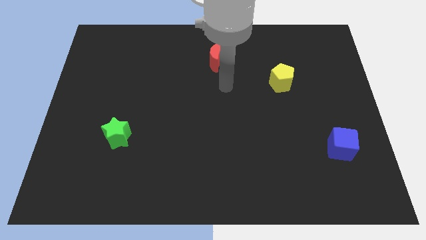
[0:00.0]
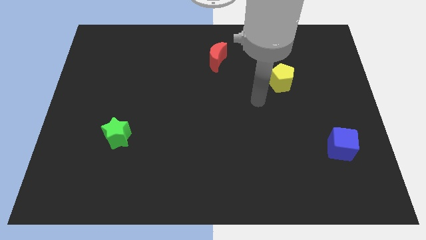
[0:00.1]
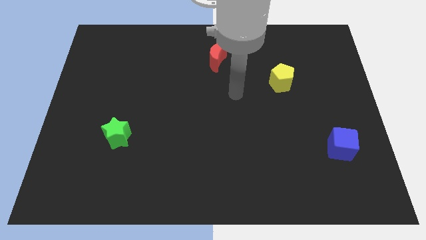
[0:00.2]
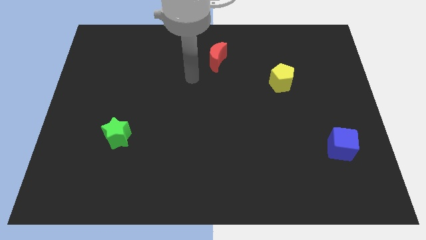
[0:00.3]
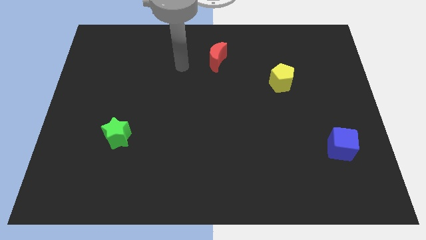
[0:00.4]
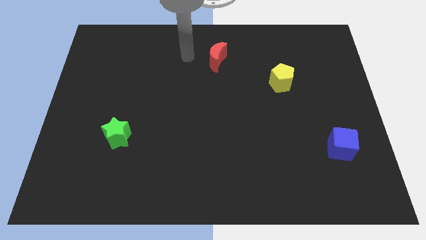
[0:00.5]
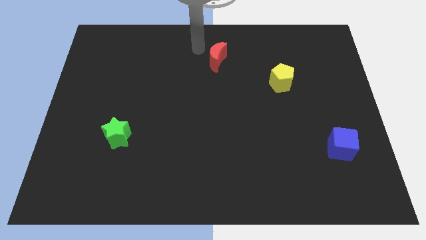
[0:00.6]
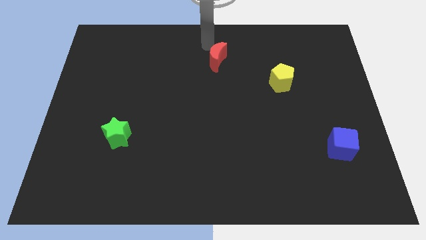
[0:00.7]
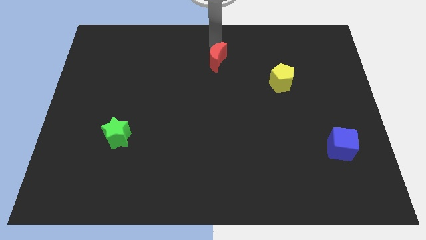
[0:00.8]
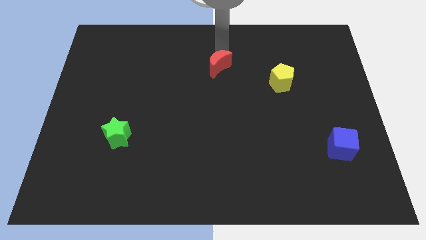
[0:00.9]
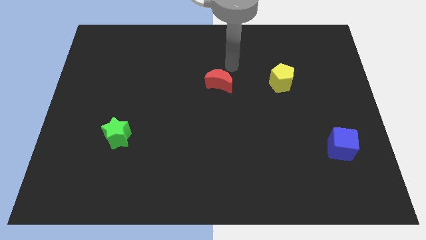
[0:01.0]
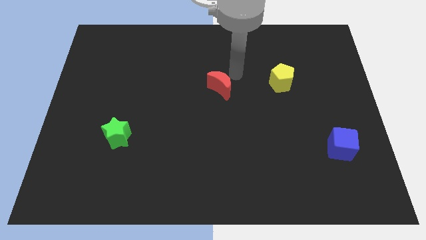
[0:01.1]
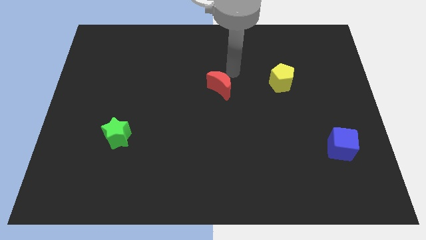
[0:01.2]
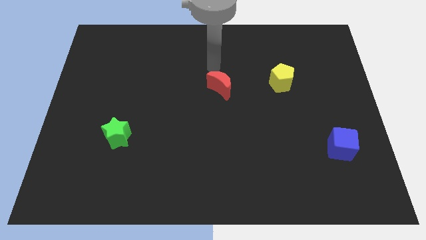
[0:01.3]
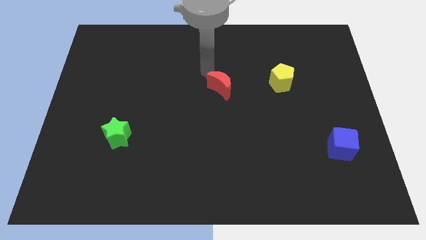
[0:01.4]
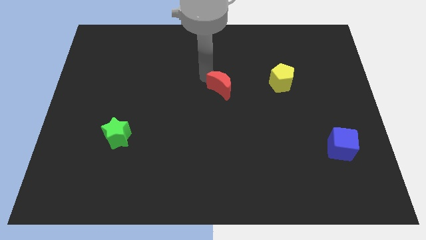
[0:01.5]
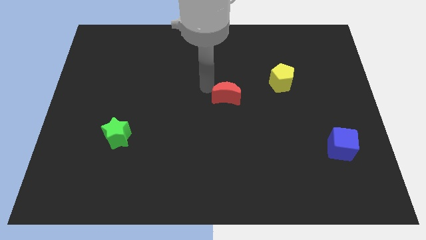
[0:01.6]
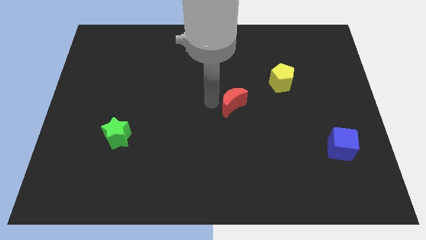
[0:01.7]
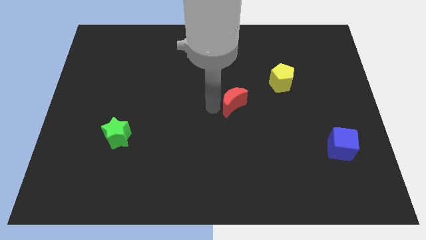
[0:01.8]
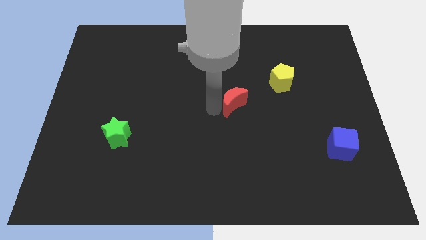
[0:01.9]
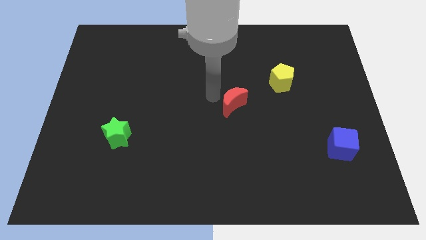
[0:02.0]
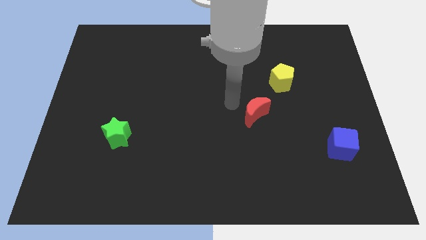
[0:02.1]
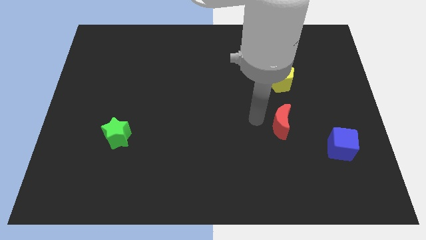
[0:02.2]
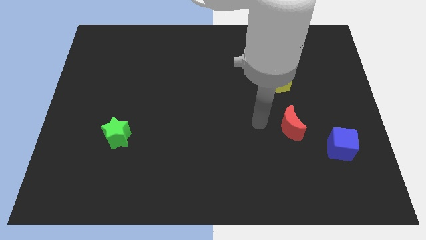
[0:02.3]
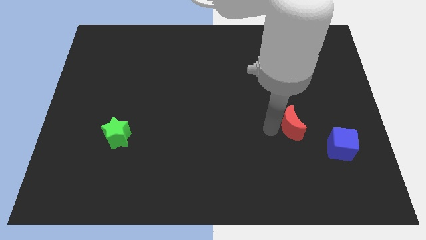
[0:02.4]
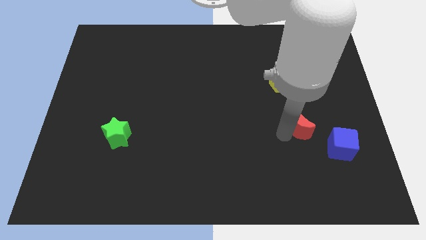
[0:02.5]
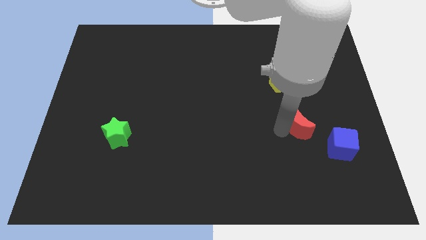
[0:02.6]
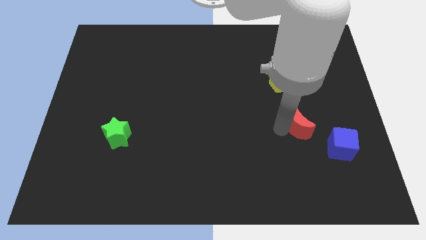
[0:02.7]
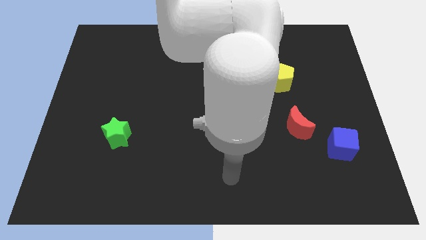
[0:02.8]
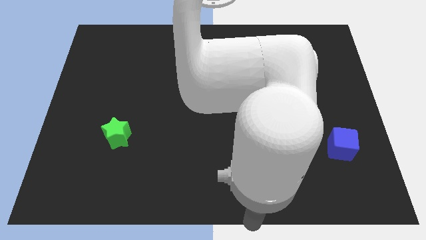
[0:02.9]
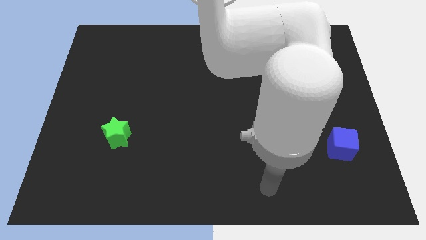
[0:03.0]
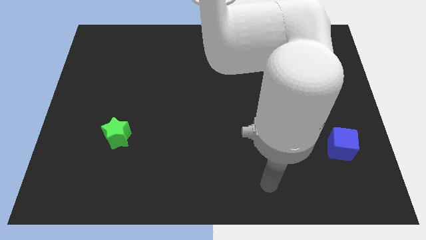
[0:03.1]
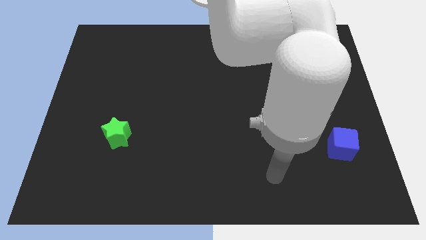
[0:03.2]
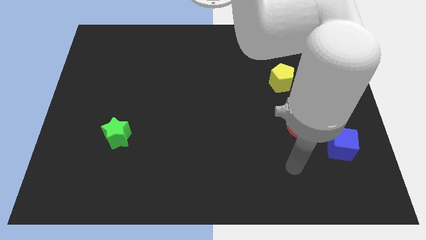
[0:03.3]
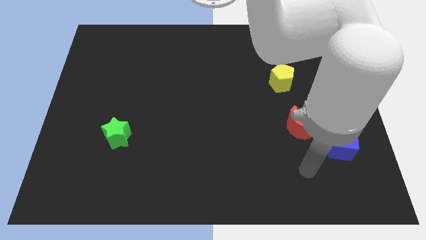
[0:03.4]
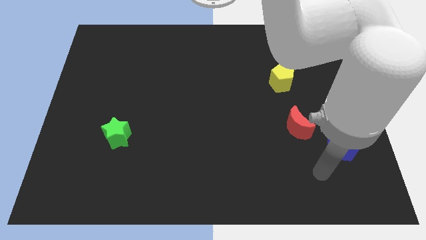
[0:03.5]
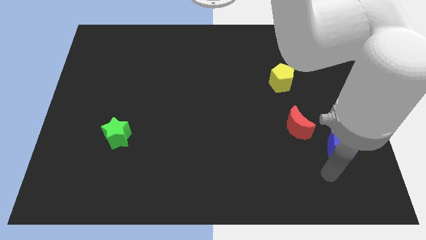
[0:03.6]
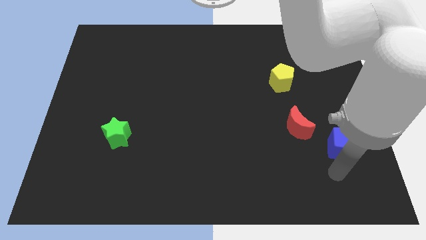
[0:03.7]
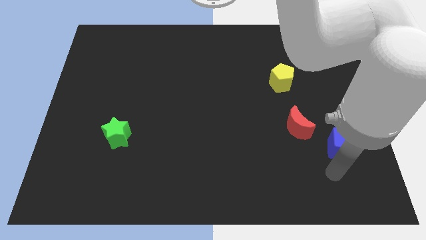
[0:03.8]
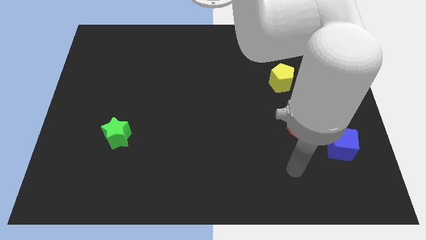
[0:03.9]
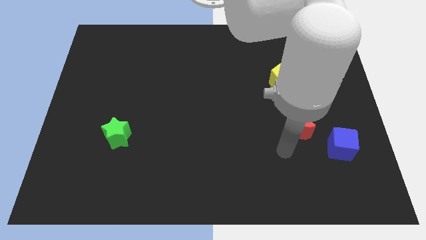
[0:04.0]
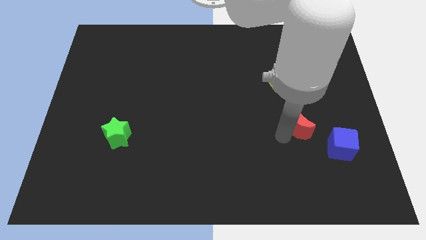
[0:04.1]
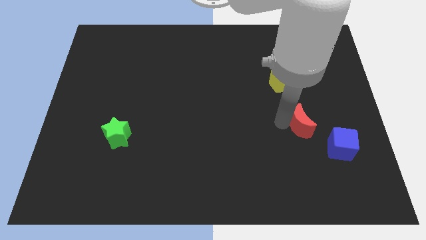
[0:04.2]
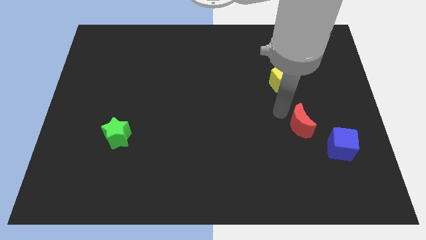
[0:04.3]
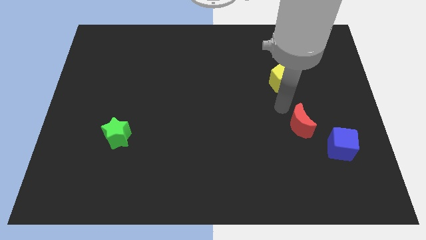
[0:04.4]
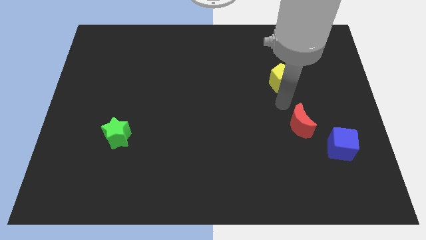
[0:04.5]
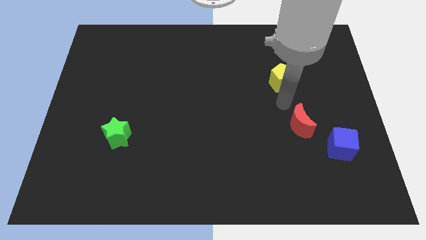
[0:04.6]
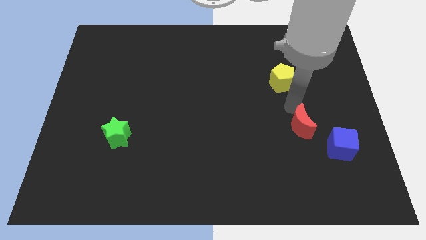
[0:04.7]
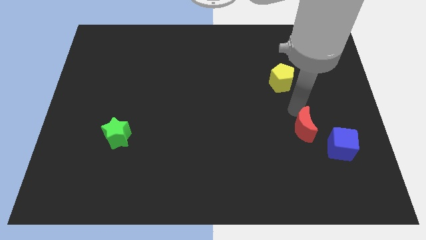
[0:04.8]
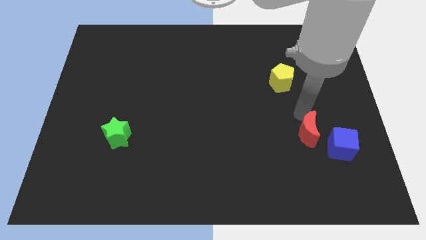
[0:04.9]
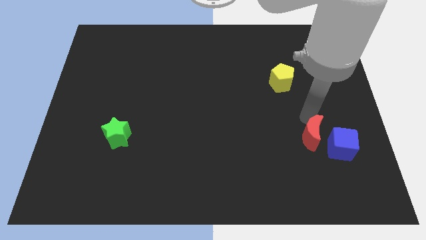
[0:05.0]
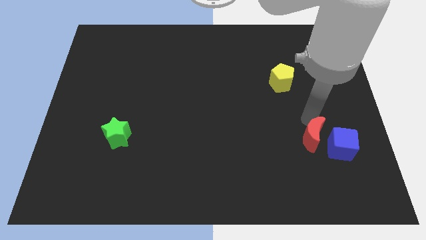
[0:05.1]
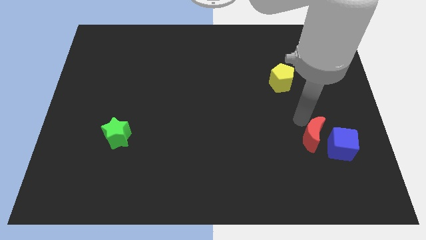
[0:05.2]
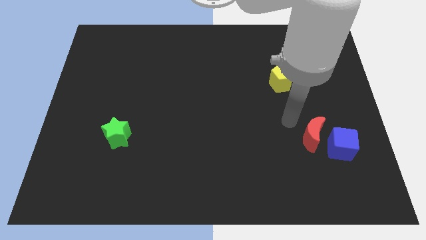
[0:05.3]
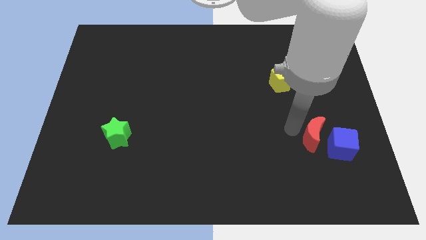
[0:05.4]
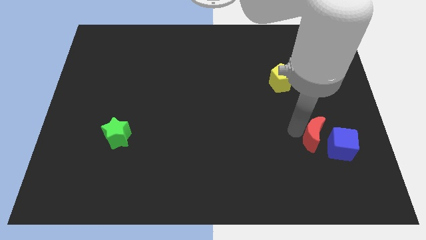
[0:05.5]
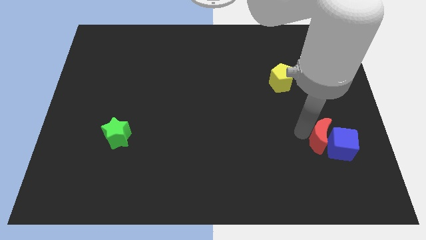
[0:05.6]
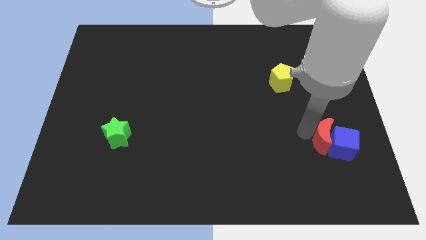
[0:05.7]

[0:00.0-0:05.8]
push the moon to the blue cube

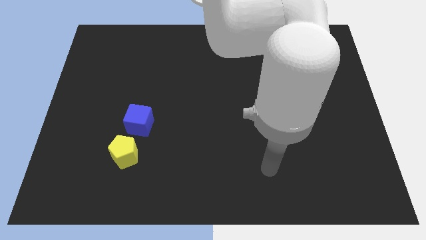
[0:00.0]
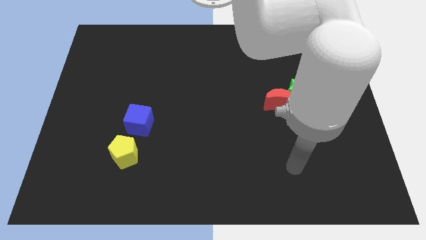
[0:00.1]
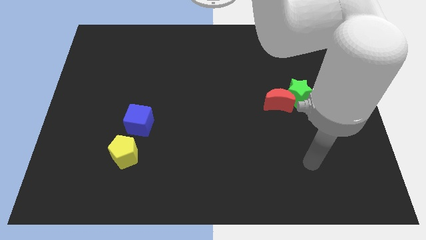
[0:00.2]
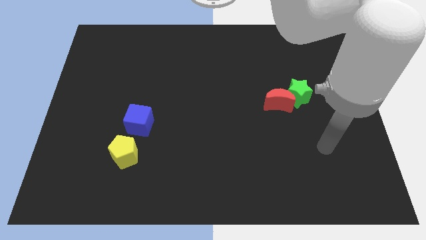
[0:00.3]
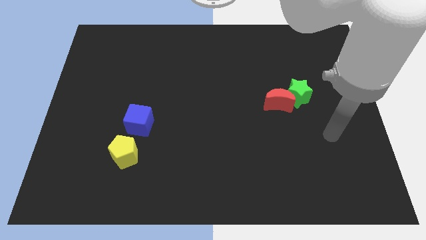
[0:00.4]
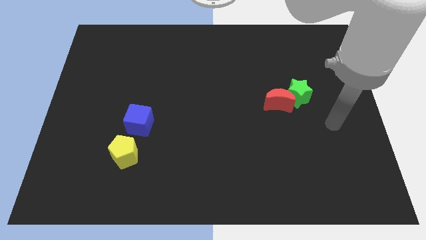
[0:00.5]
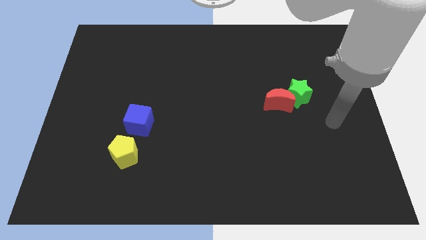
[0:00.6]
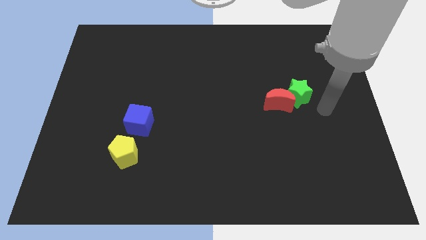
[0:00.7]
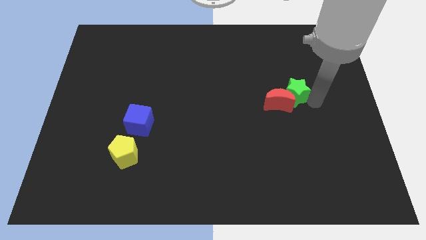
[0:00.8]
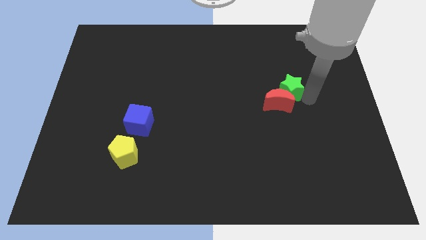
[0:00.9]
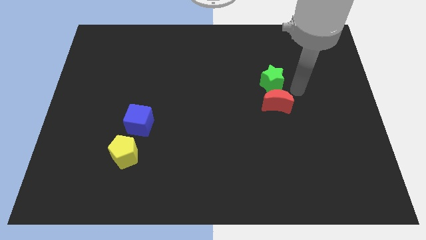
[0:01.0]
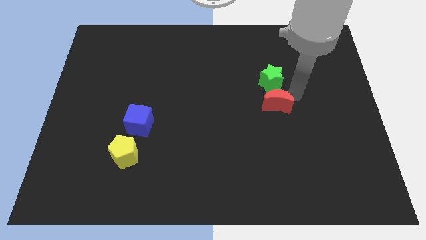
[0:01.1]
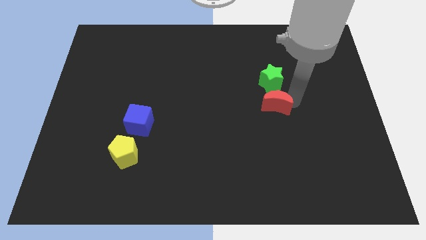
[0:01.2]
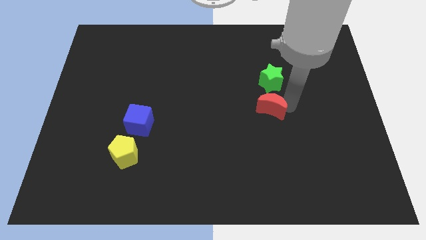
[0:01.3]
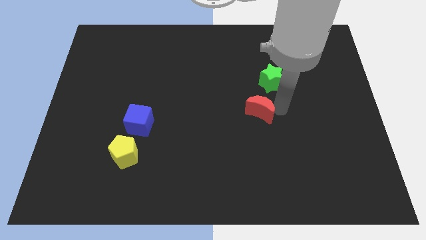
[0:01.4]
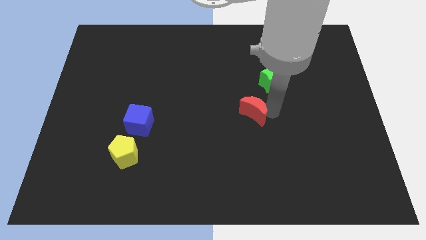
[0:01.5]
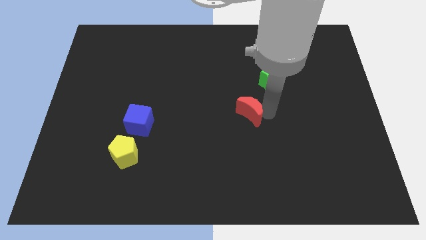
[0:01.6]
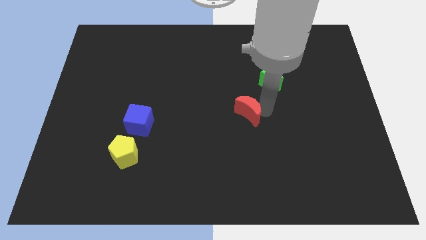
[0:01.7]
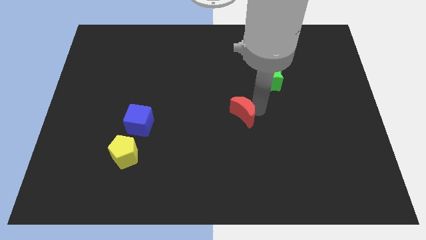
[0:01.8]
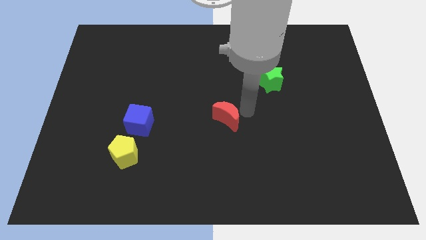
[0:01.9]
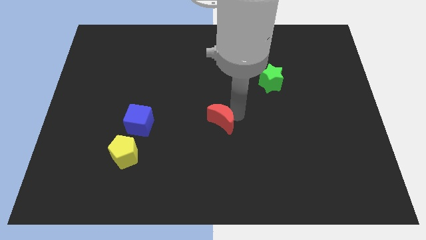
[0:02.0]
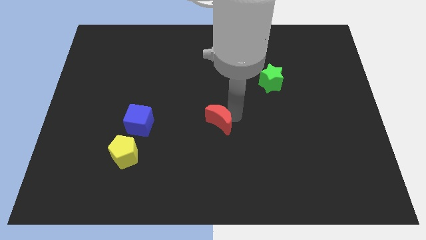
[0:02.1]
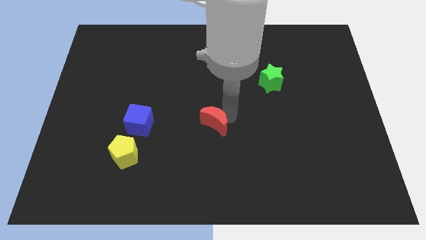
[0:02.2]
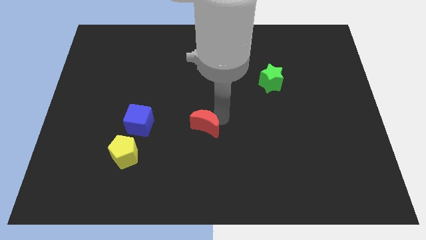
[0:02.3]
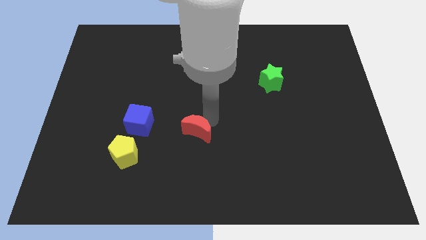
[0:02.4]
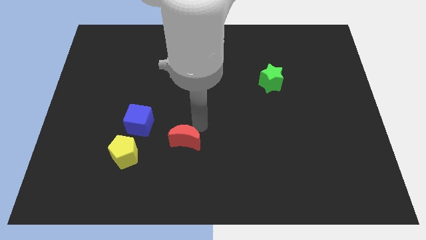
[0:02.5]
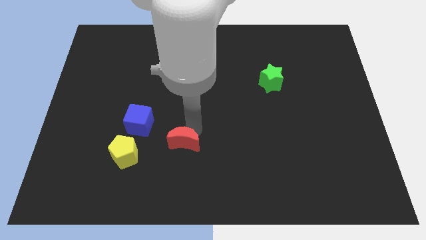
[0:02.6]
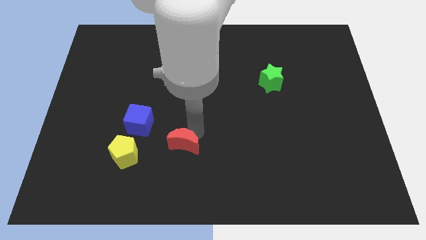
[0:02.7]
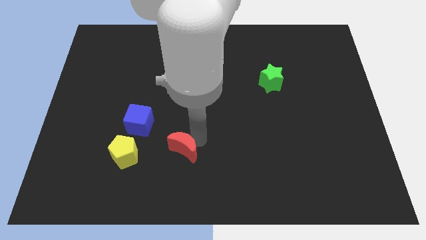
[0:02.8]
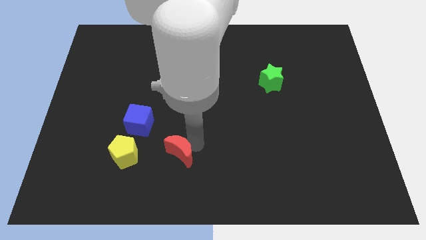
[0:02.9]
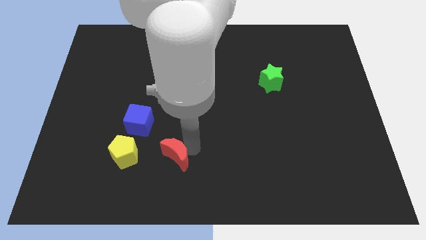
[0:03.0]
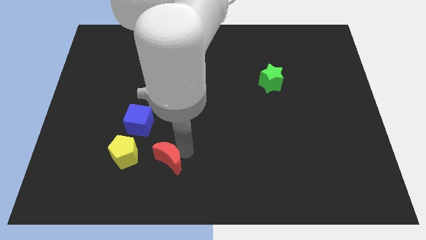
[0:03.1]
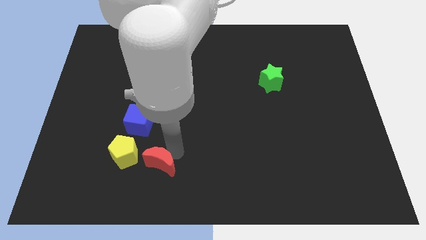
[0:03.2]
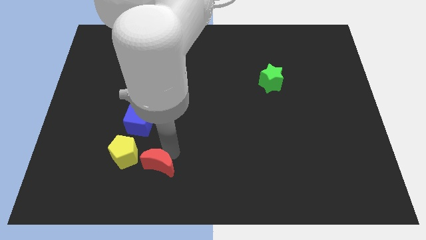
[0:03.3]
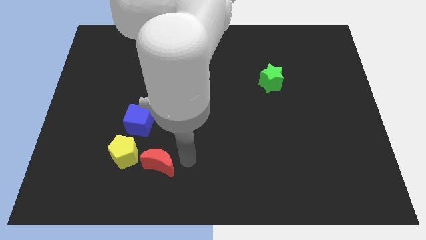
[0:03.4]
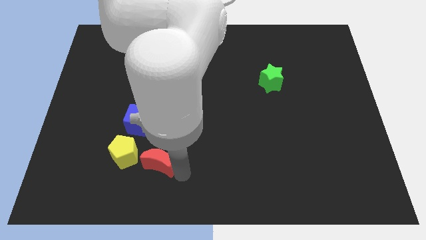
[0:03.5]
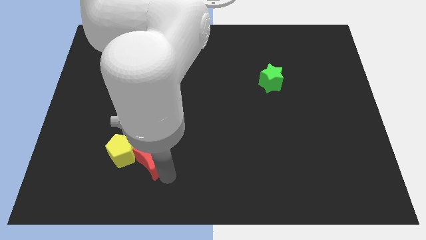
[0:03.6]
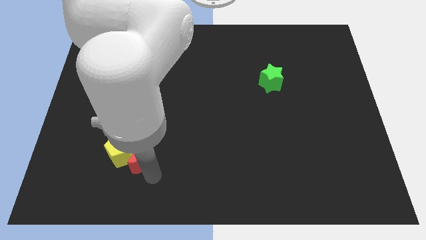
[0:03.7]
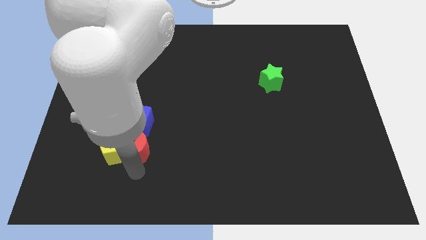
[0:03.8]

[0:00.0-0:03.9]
slide the red moon close to the pentagon
